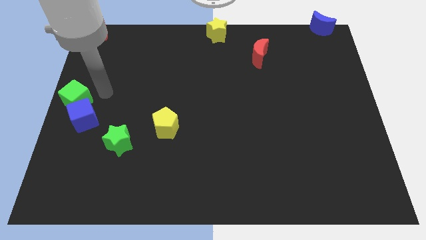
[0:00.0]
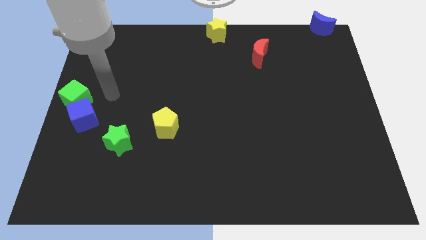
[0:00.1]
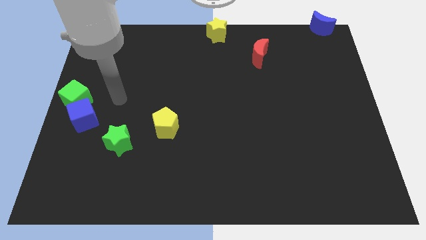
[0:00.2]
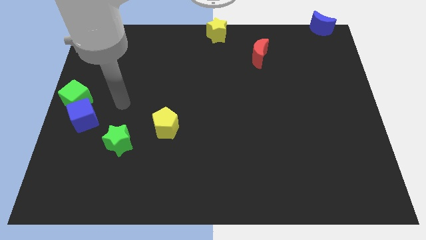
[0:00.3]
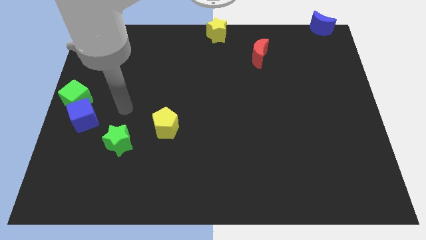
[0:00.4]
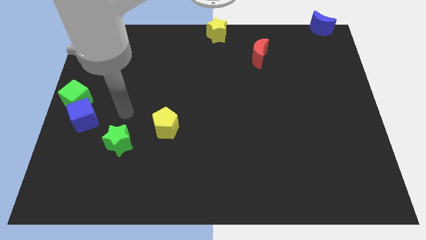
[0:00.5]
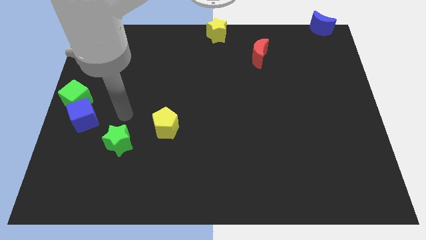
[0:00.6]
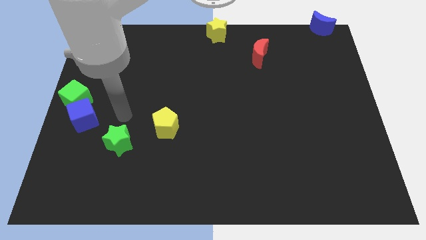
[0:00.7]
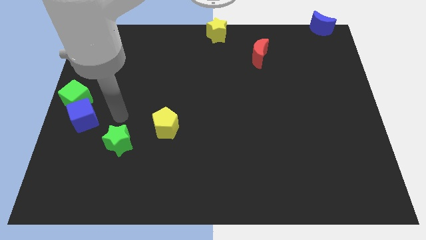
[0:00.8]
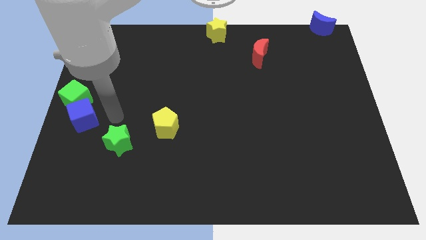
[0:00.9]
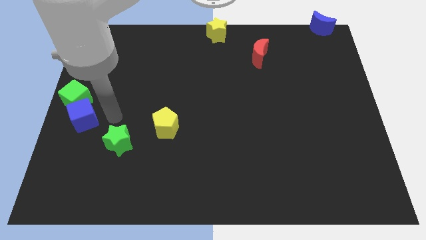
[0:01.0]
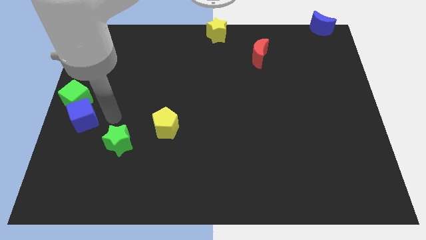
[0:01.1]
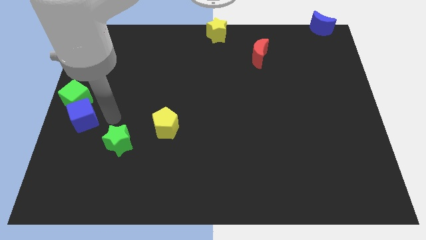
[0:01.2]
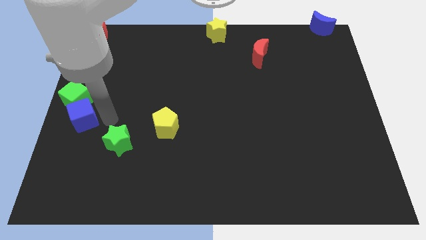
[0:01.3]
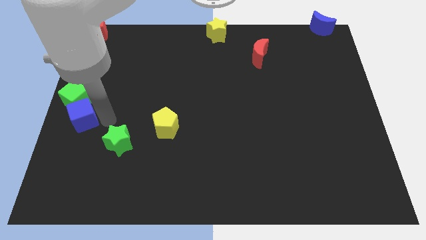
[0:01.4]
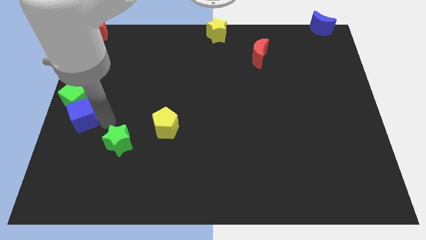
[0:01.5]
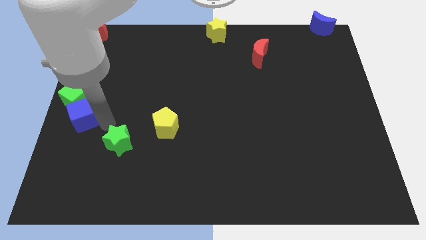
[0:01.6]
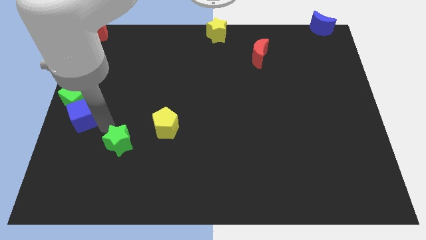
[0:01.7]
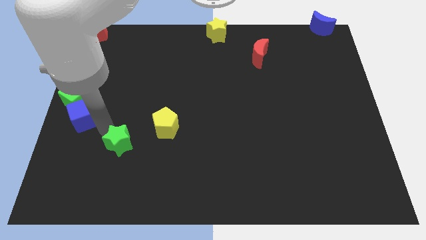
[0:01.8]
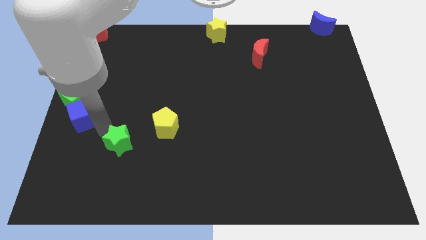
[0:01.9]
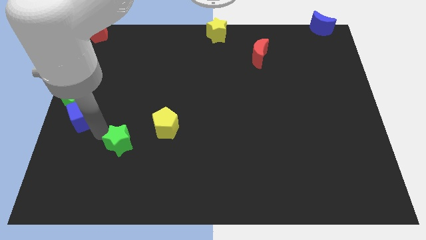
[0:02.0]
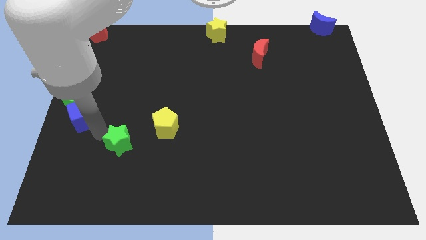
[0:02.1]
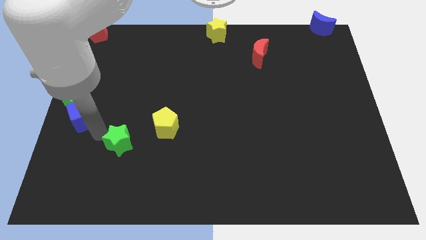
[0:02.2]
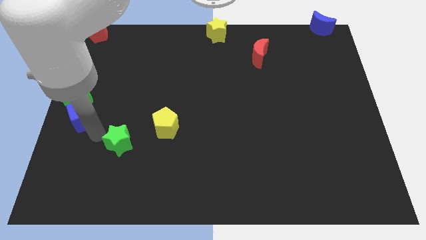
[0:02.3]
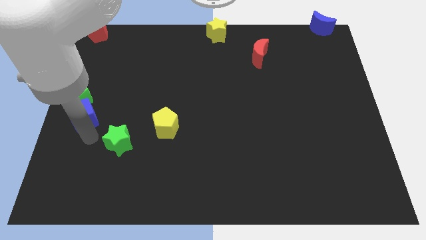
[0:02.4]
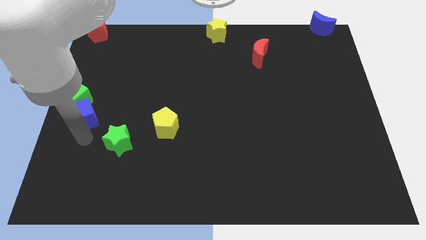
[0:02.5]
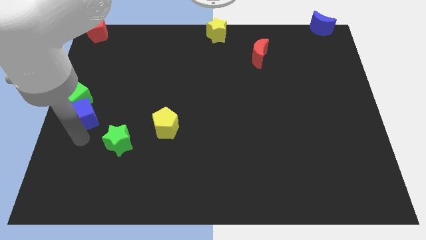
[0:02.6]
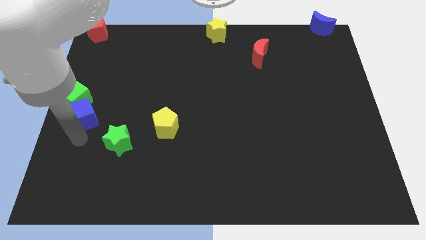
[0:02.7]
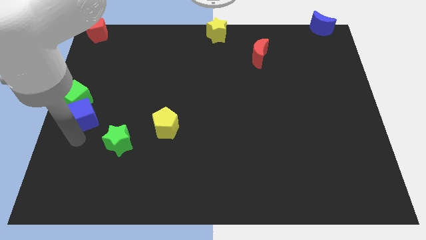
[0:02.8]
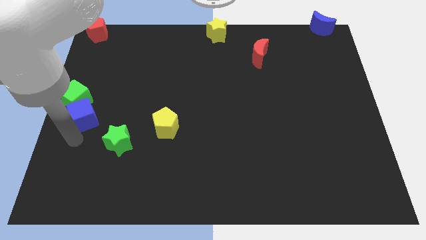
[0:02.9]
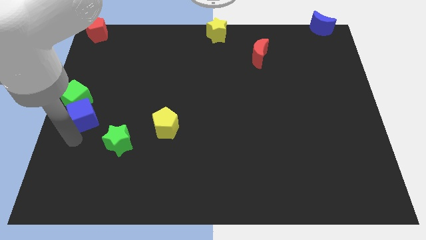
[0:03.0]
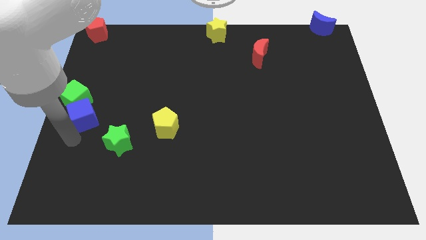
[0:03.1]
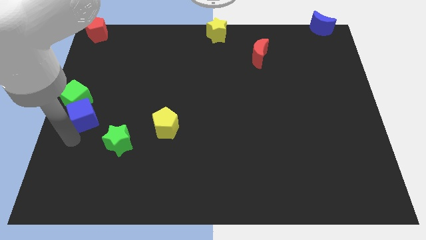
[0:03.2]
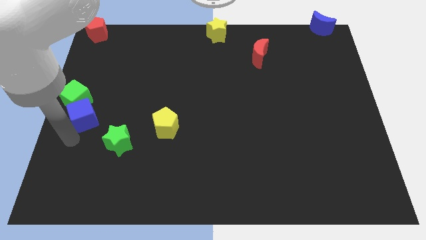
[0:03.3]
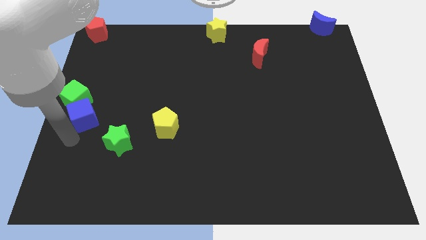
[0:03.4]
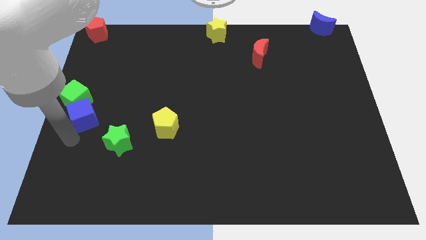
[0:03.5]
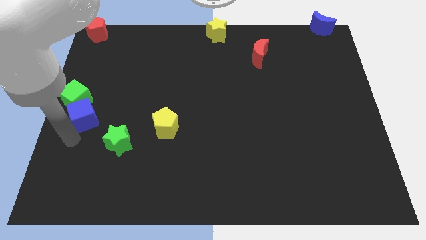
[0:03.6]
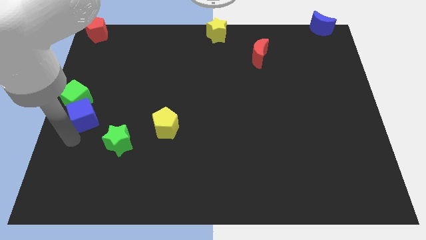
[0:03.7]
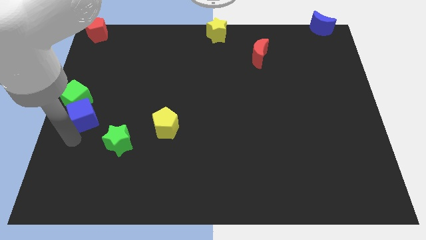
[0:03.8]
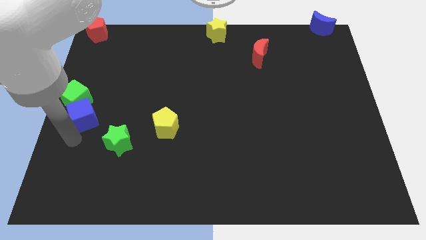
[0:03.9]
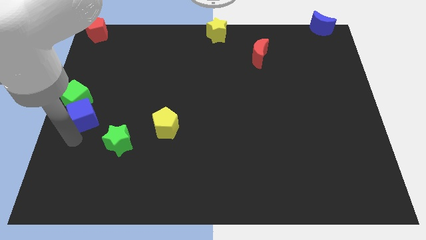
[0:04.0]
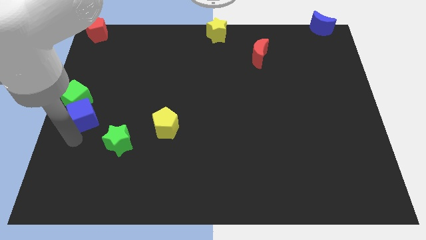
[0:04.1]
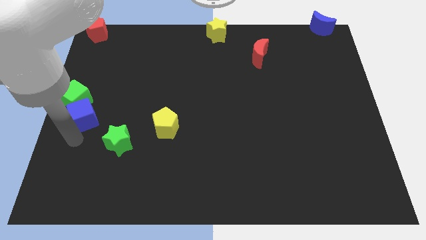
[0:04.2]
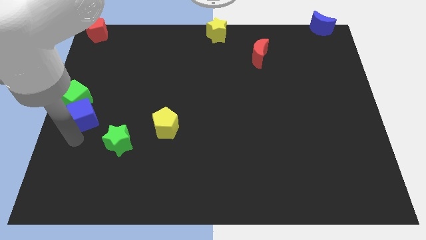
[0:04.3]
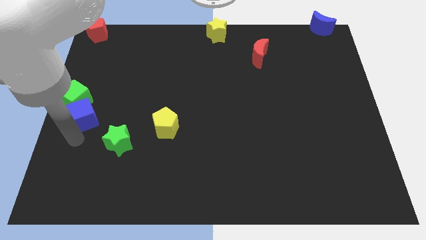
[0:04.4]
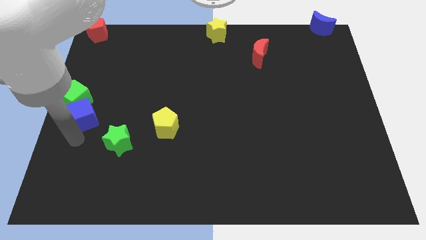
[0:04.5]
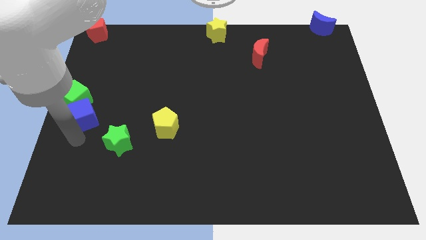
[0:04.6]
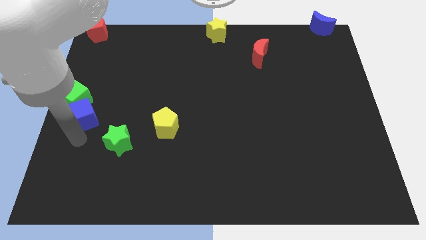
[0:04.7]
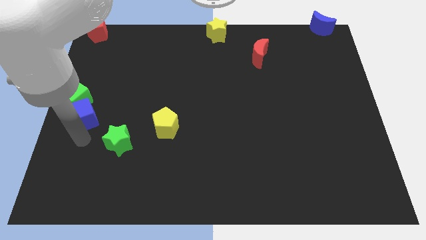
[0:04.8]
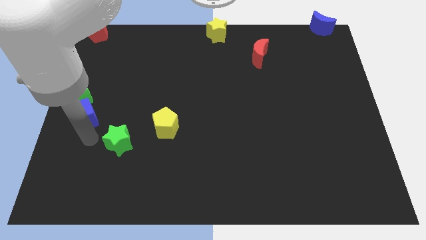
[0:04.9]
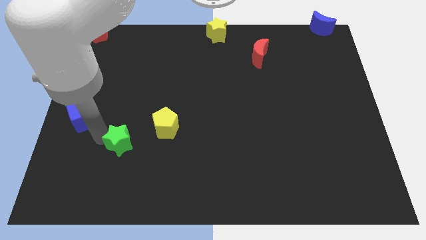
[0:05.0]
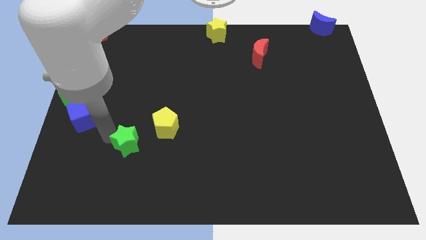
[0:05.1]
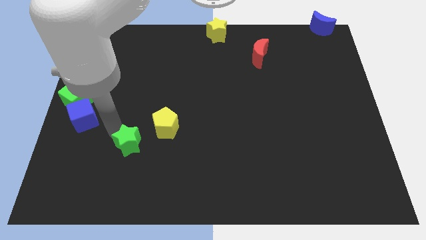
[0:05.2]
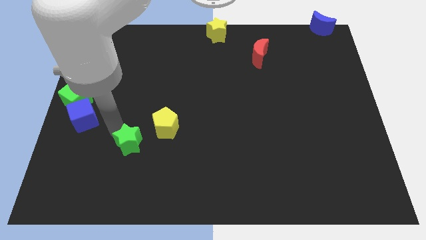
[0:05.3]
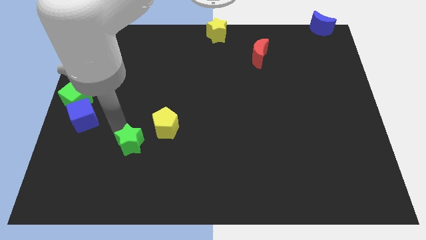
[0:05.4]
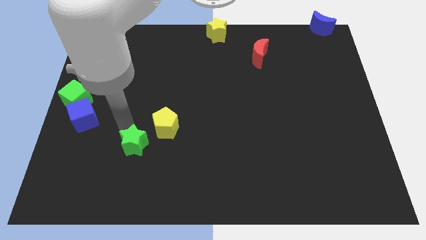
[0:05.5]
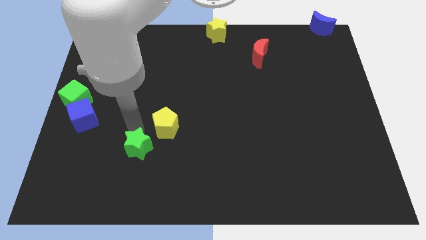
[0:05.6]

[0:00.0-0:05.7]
move the green star close to the yellow pentagon

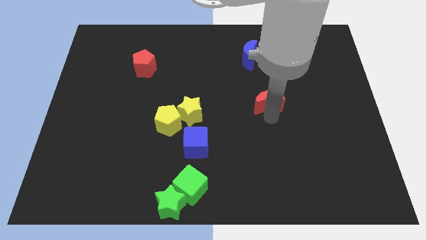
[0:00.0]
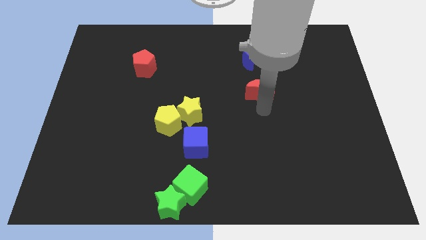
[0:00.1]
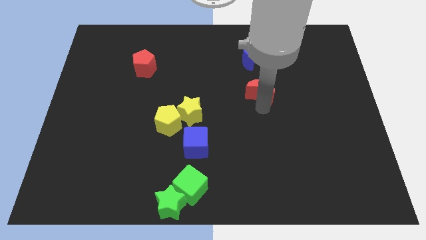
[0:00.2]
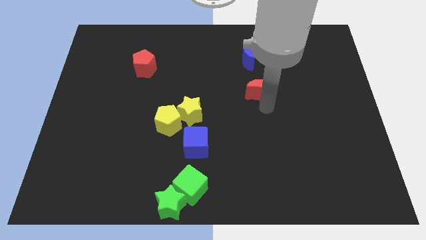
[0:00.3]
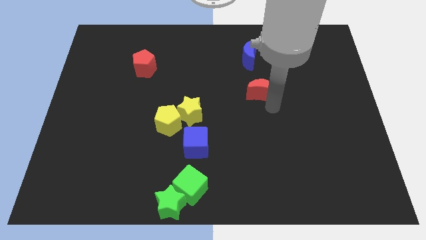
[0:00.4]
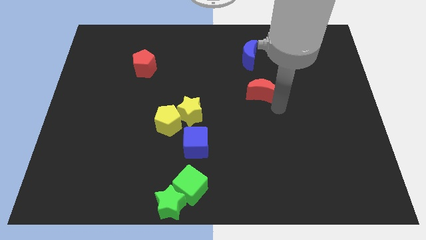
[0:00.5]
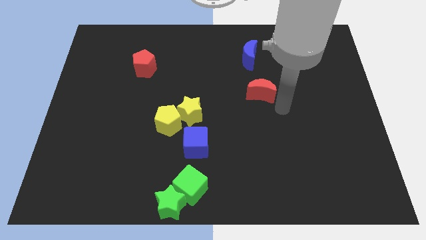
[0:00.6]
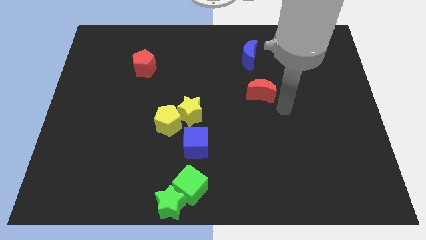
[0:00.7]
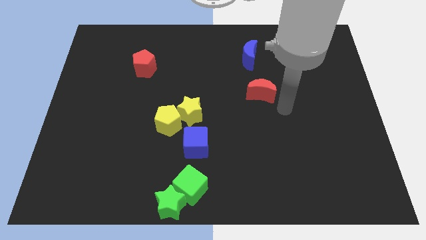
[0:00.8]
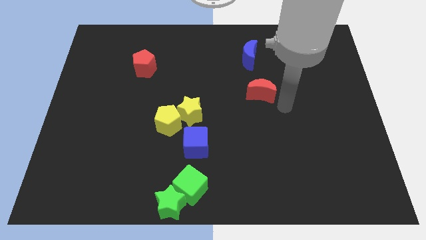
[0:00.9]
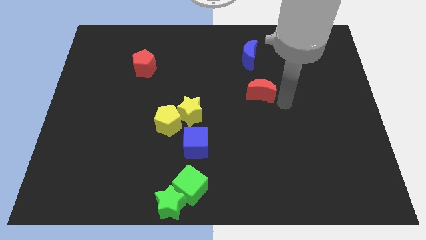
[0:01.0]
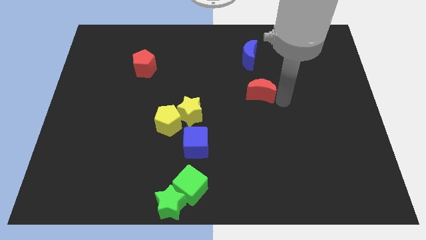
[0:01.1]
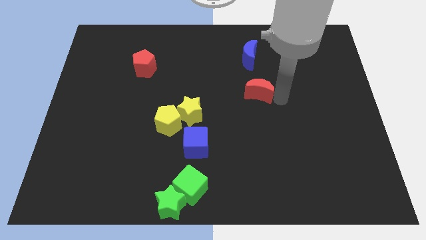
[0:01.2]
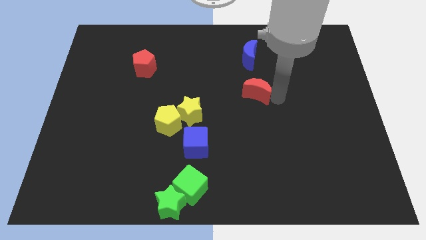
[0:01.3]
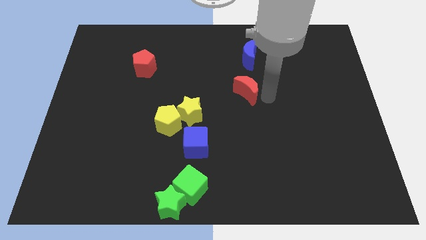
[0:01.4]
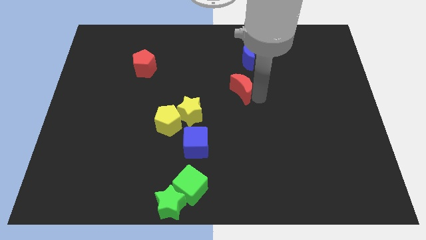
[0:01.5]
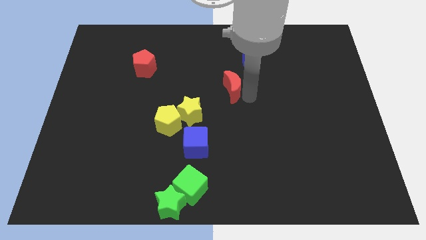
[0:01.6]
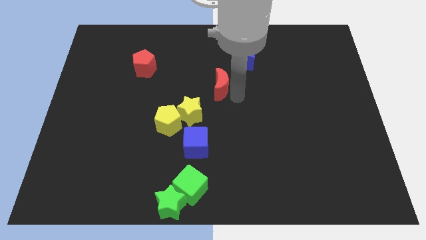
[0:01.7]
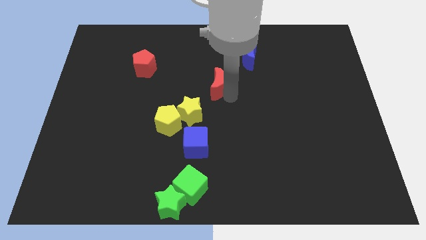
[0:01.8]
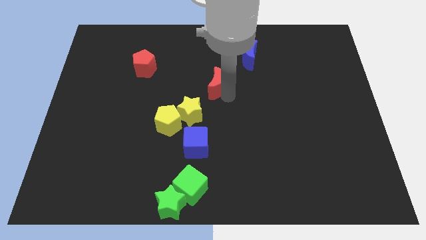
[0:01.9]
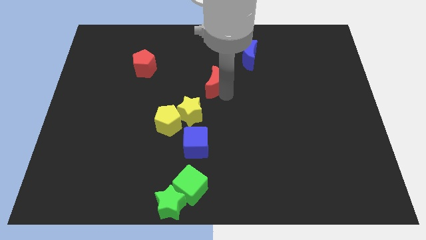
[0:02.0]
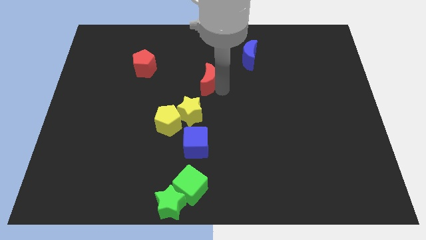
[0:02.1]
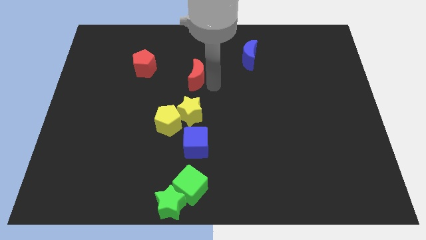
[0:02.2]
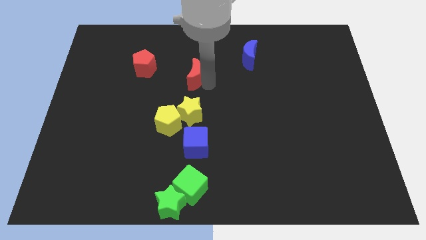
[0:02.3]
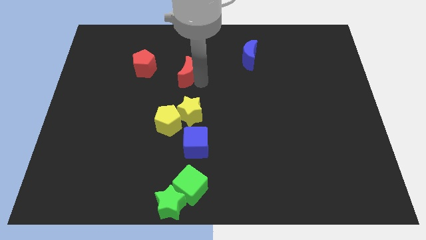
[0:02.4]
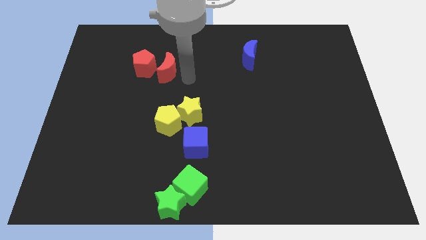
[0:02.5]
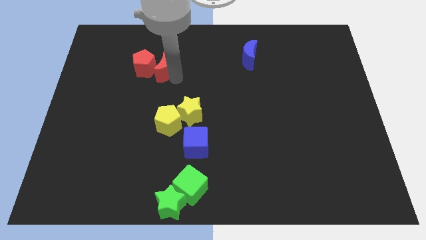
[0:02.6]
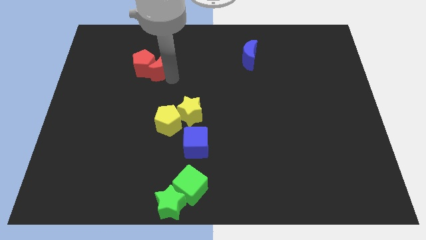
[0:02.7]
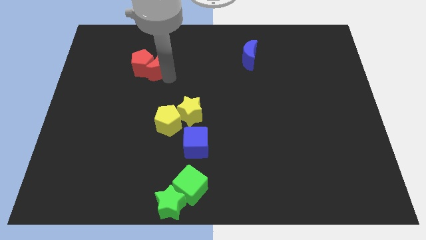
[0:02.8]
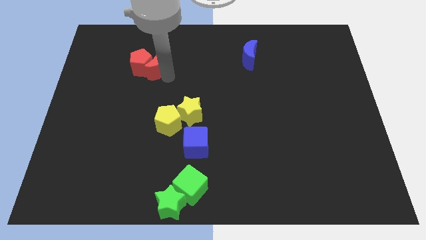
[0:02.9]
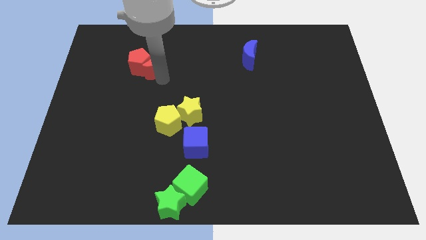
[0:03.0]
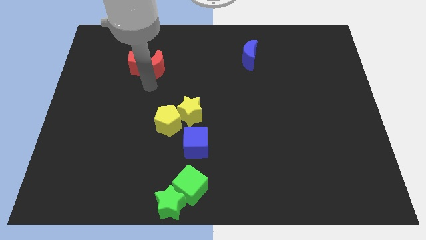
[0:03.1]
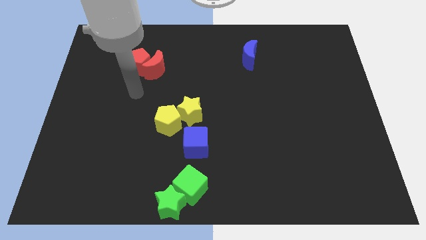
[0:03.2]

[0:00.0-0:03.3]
move the red crescent into the right side of the red pentagon
